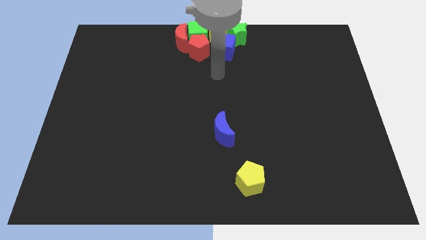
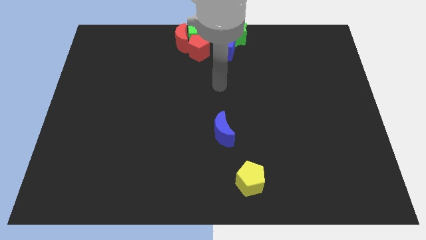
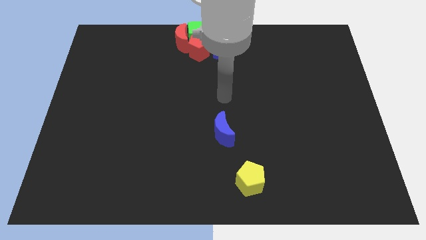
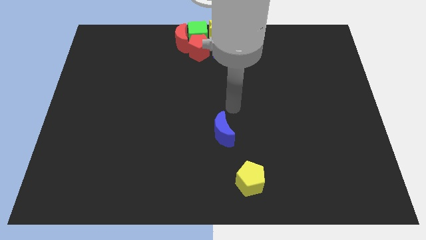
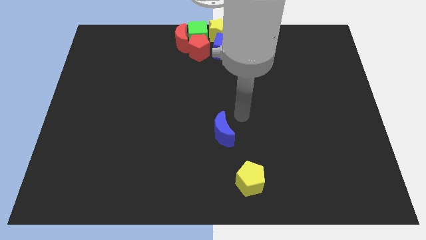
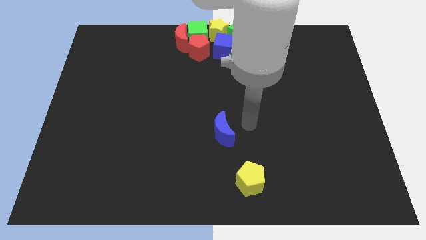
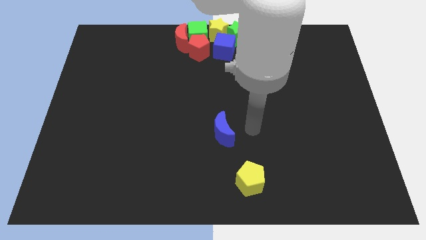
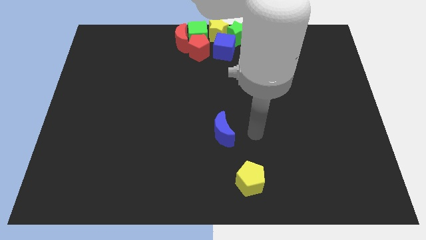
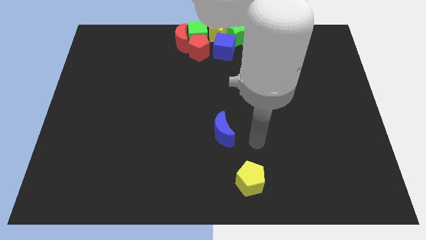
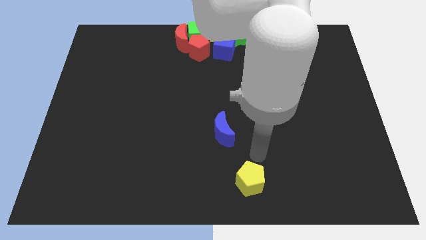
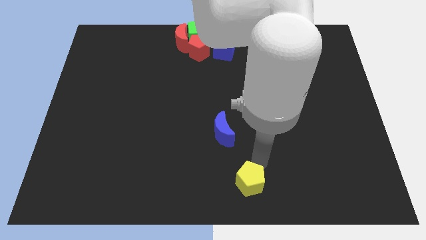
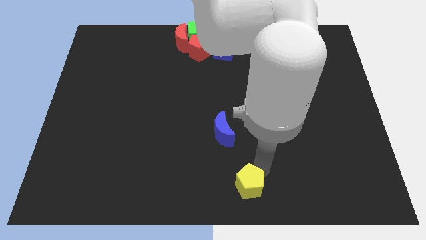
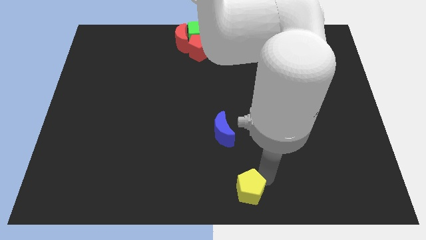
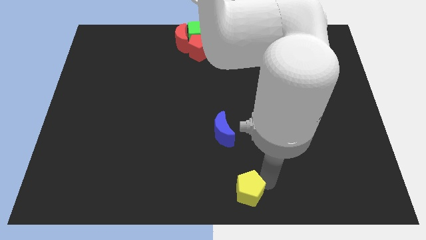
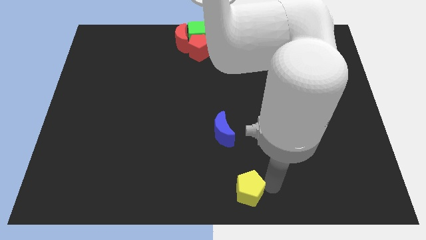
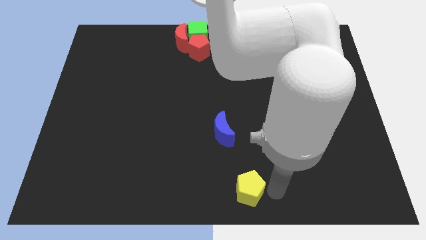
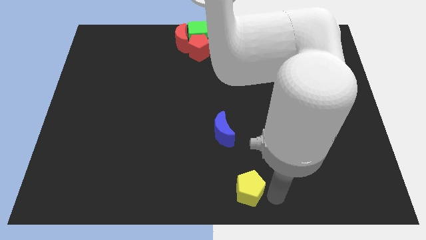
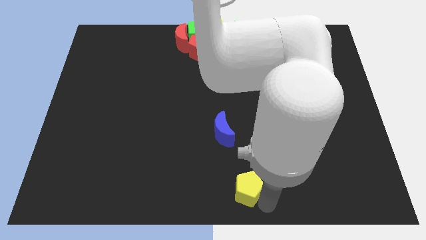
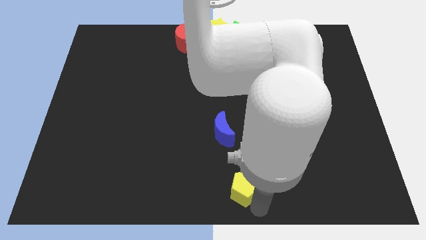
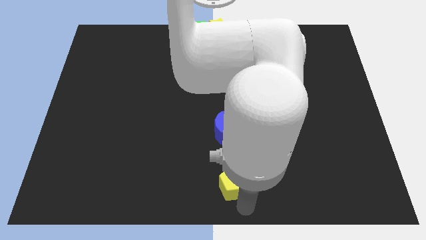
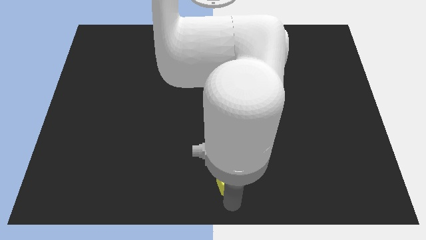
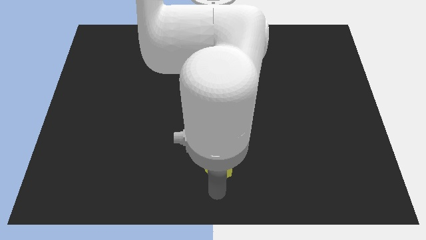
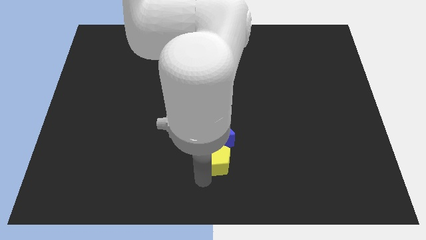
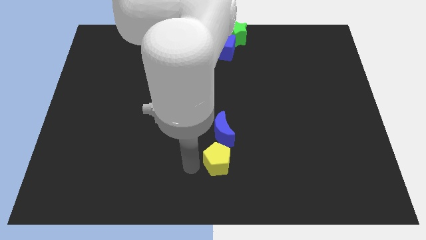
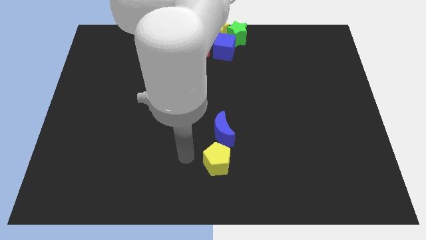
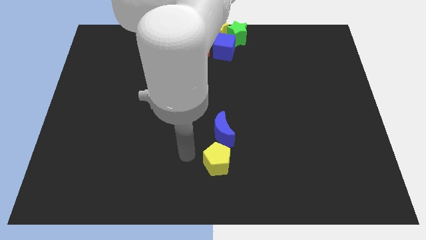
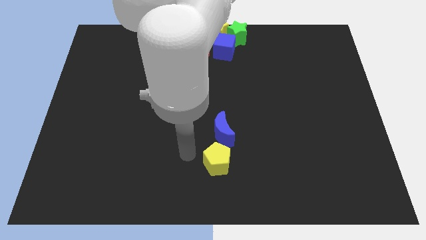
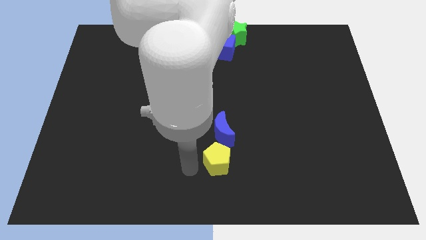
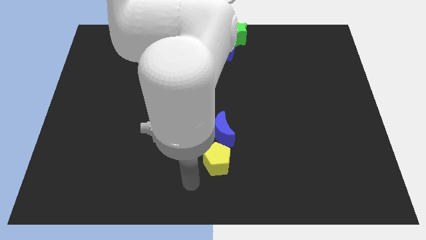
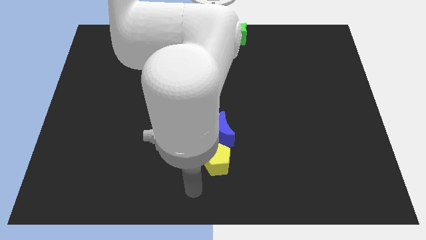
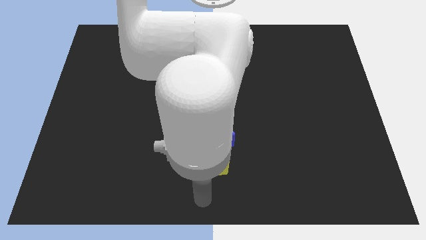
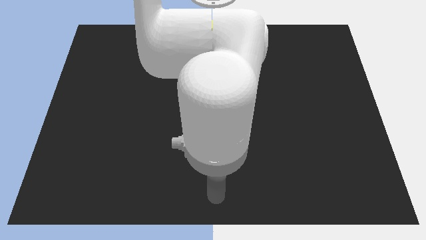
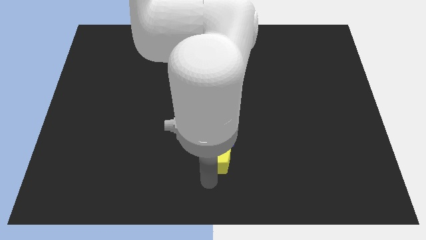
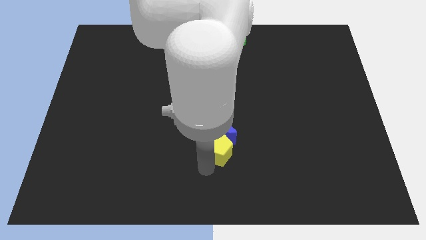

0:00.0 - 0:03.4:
place the yellow pentagon below the blue crescent

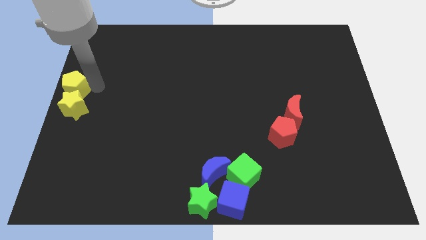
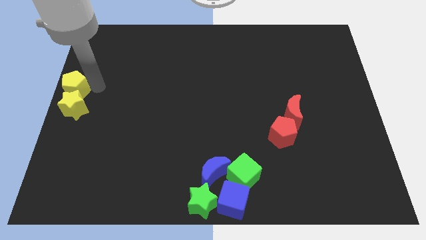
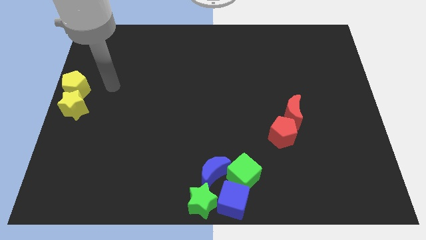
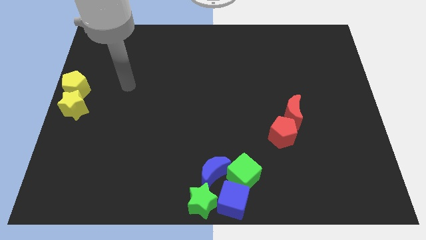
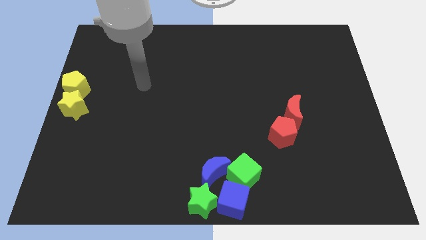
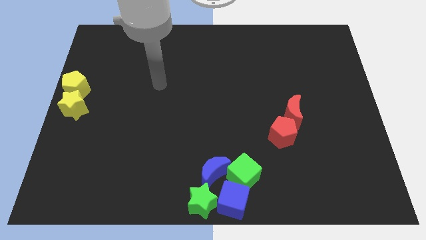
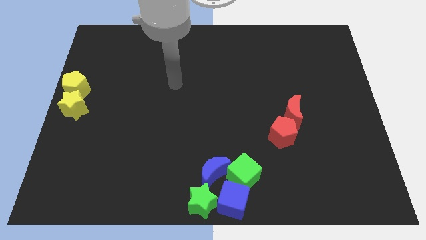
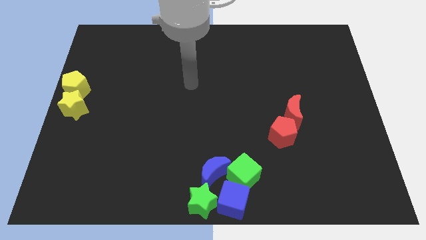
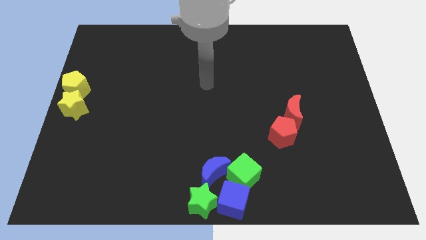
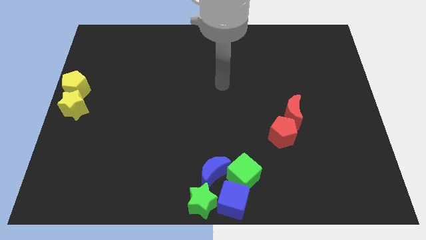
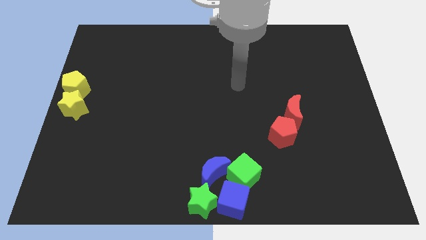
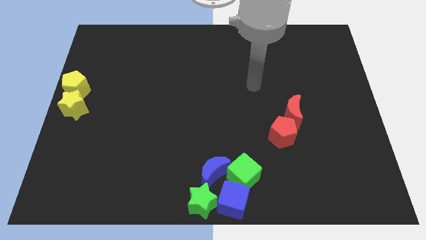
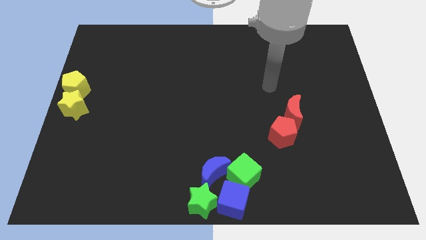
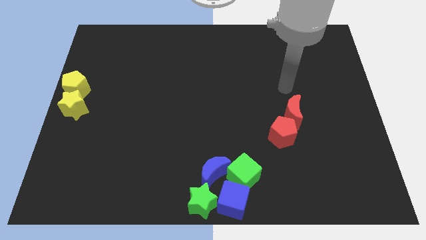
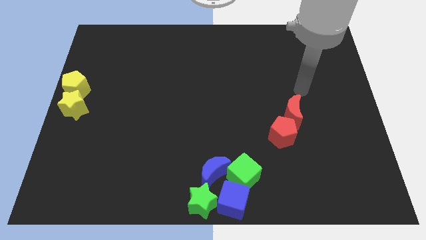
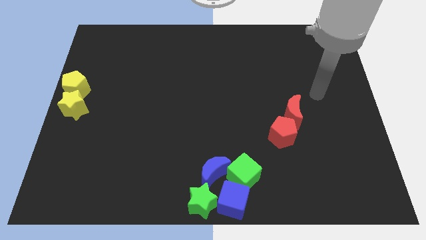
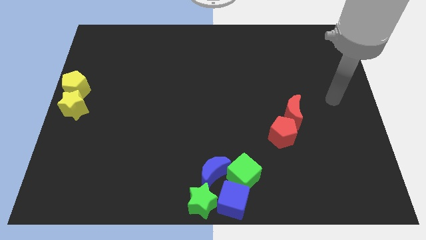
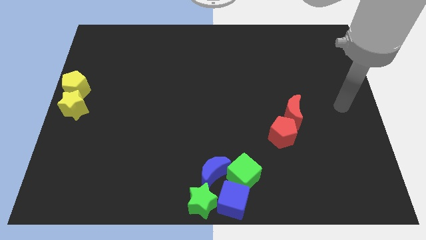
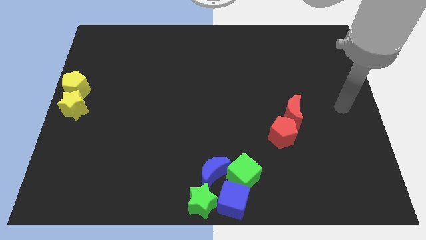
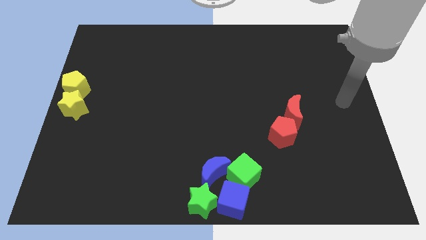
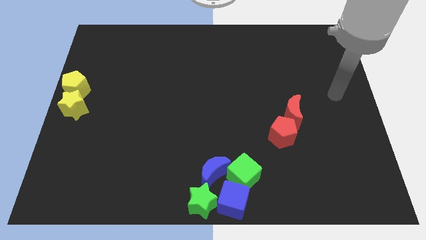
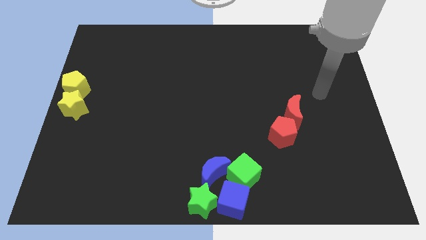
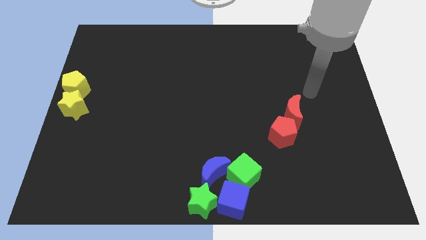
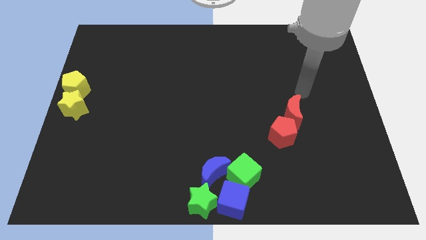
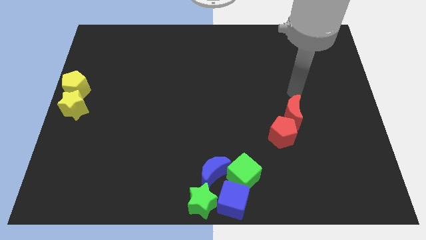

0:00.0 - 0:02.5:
move your arm to the top of the red moon

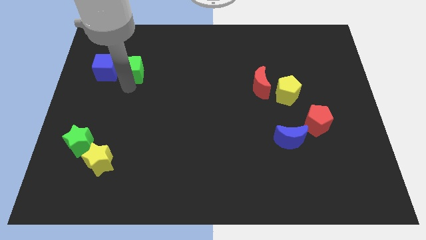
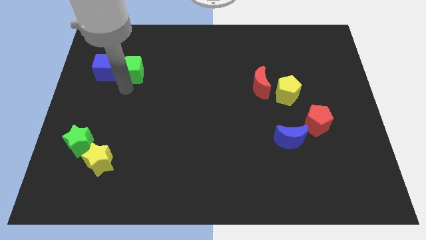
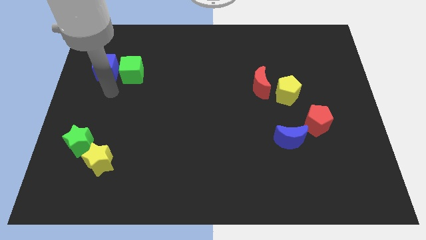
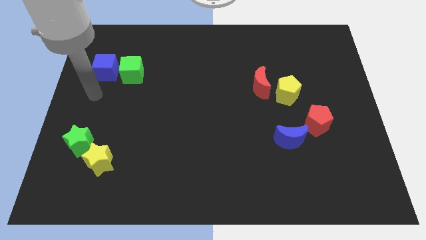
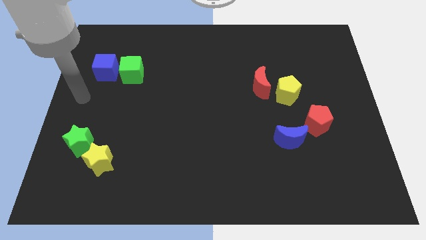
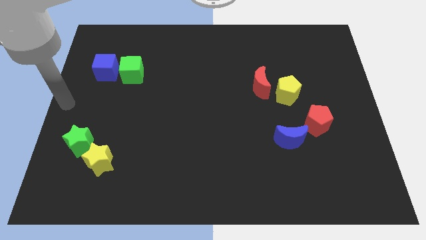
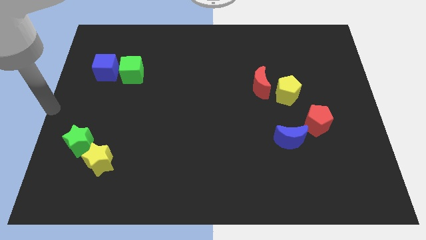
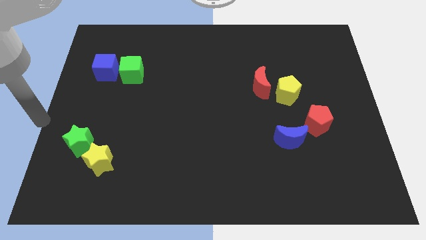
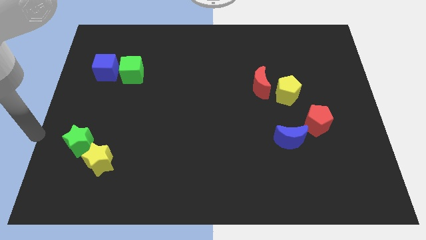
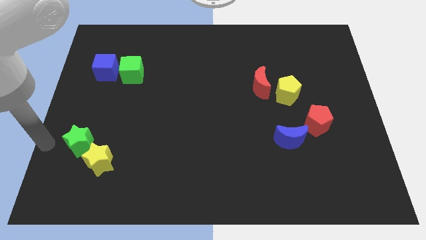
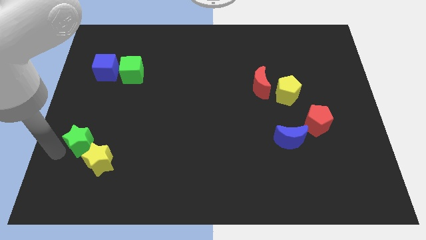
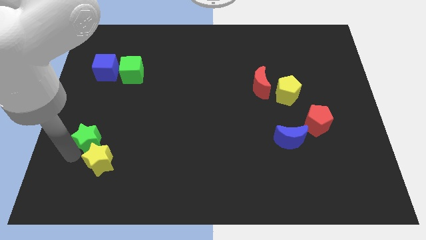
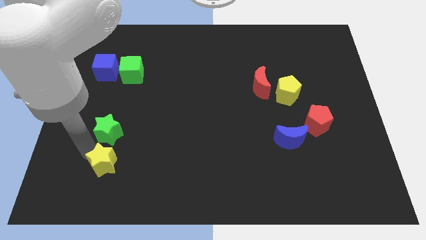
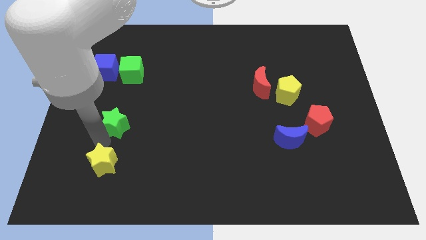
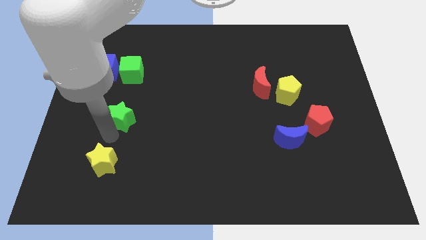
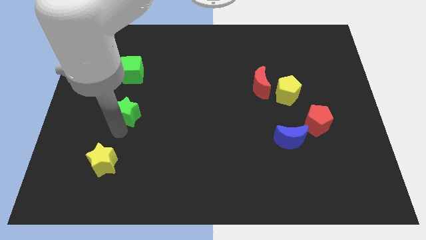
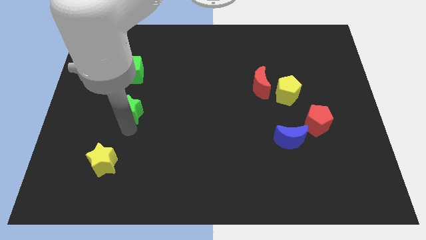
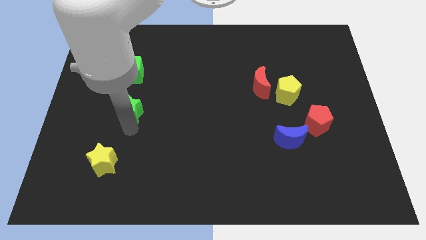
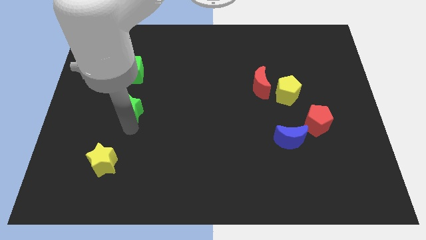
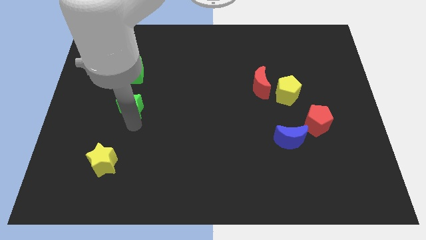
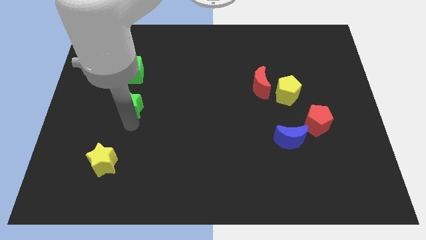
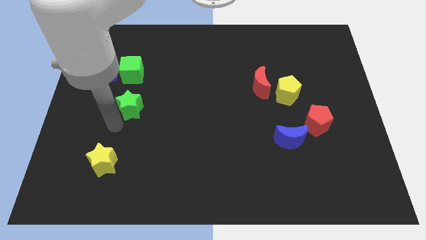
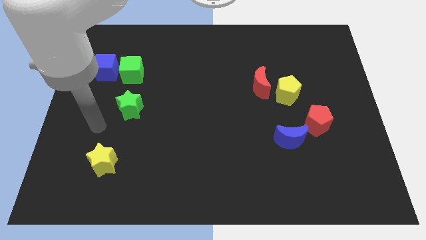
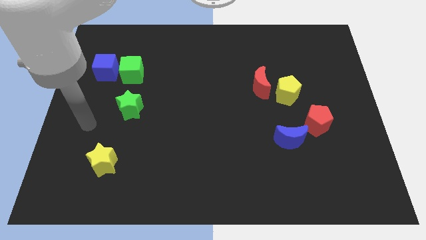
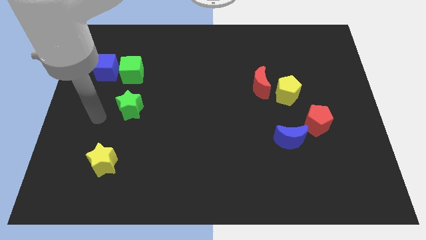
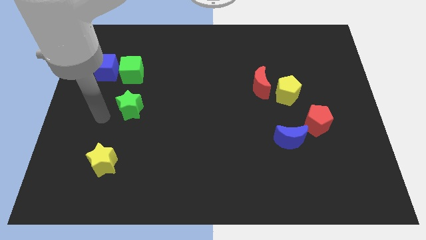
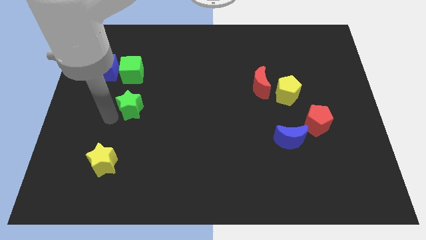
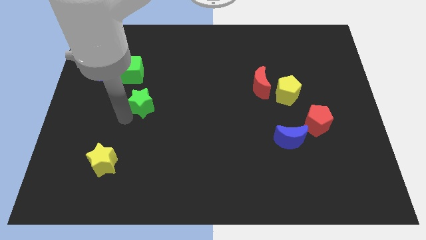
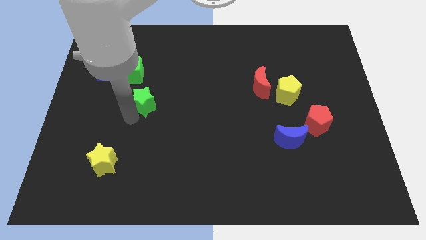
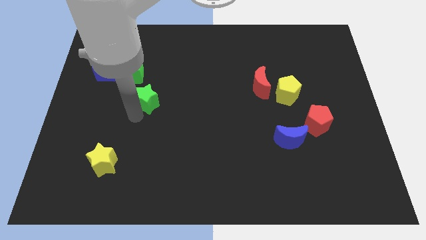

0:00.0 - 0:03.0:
place the green star below the green cube

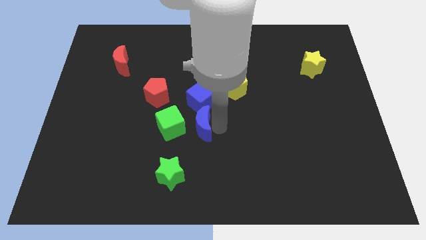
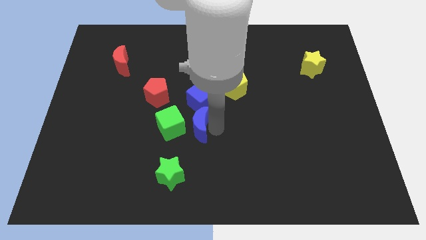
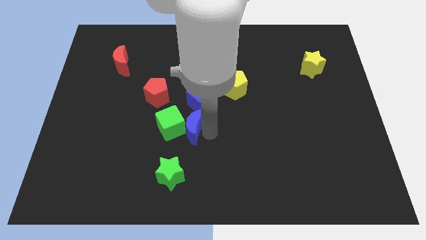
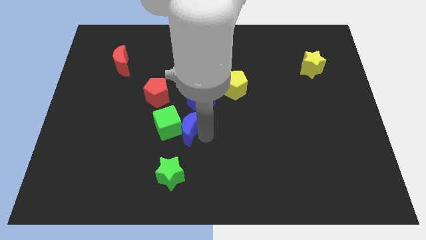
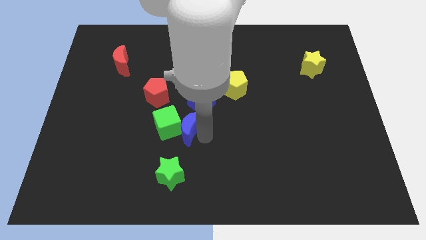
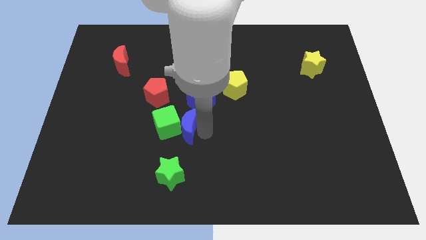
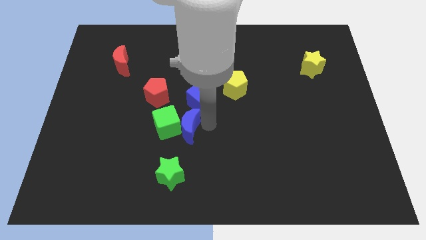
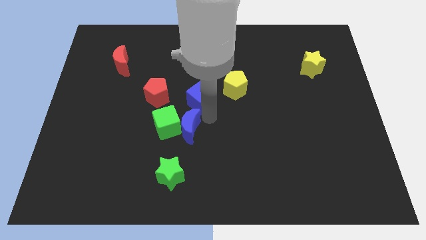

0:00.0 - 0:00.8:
move the blue moon to the right side of the green cube
